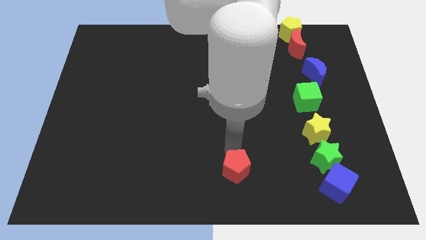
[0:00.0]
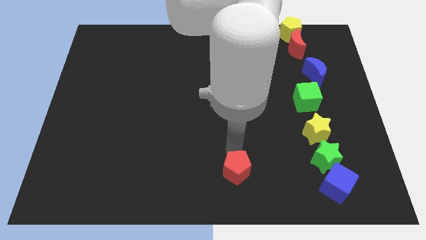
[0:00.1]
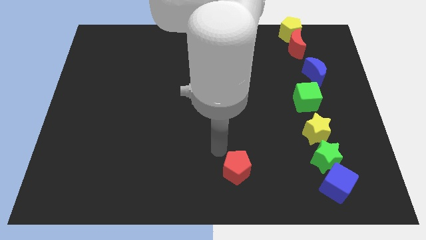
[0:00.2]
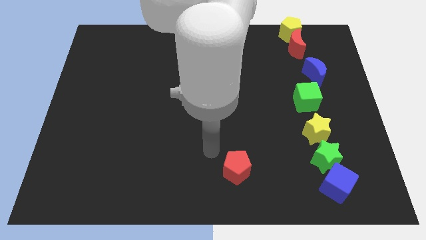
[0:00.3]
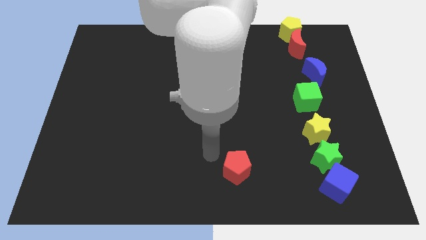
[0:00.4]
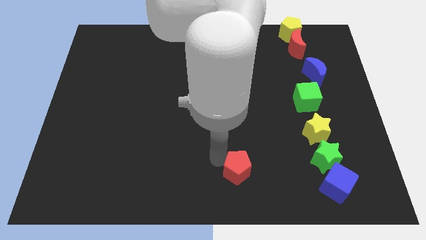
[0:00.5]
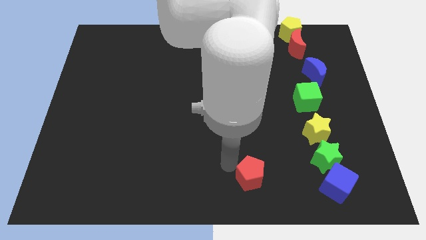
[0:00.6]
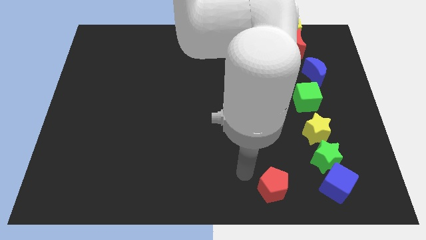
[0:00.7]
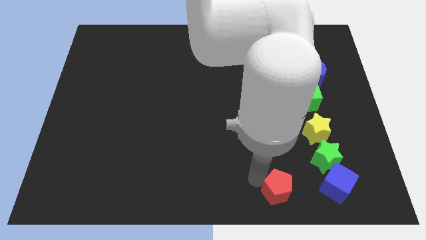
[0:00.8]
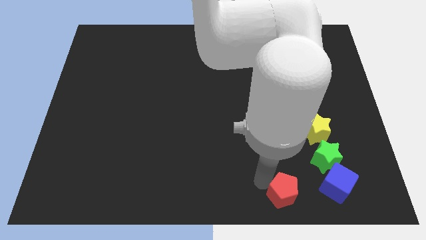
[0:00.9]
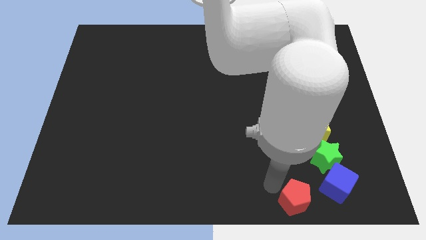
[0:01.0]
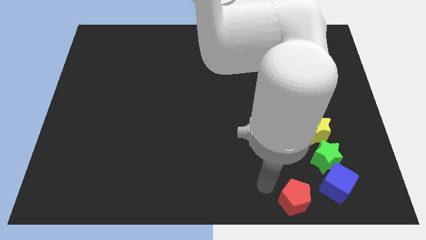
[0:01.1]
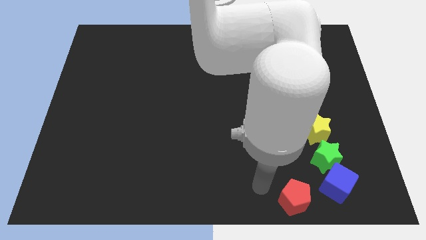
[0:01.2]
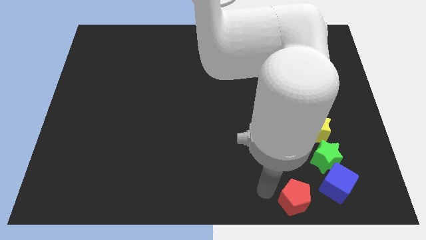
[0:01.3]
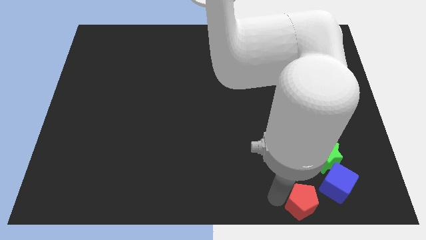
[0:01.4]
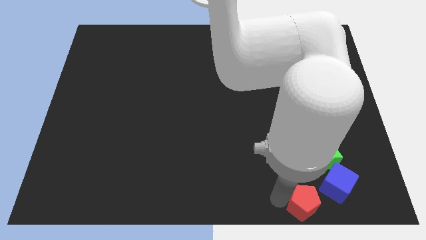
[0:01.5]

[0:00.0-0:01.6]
move red pentagon to the left side of the blue cube

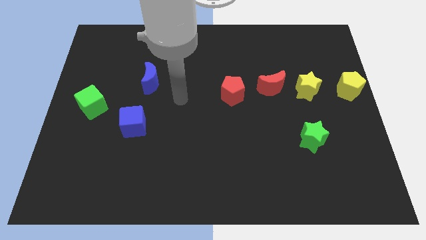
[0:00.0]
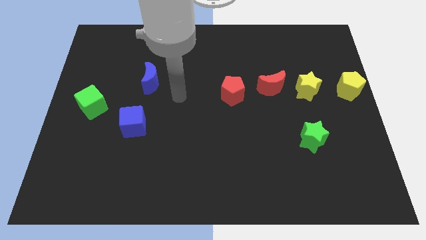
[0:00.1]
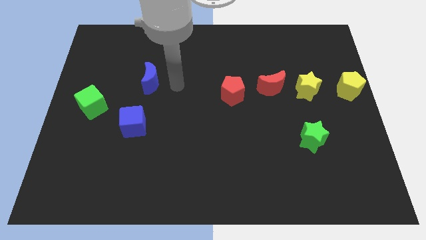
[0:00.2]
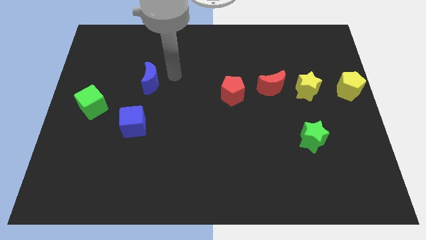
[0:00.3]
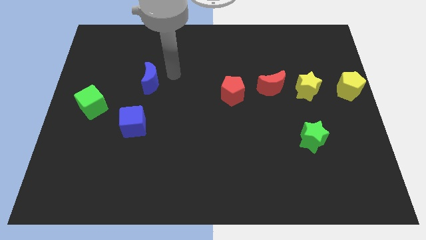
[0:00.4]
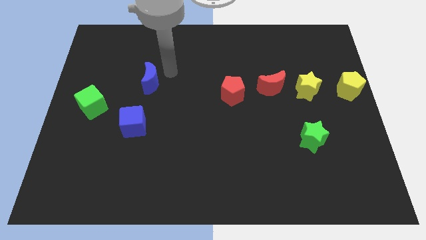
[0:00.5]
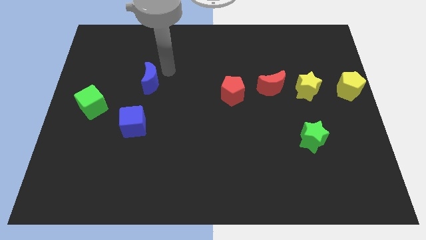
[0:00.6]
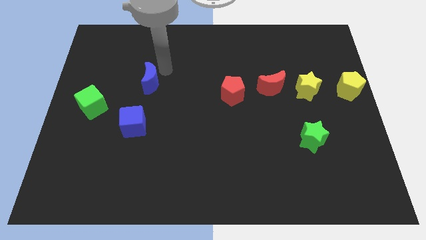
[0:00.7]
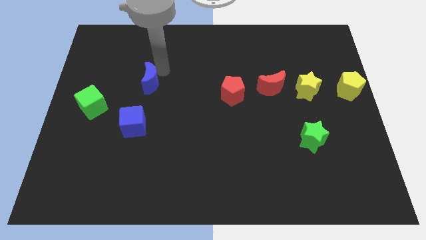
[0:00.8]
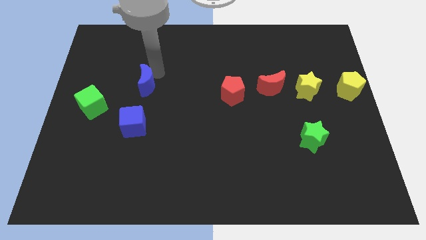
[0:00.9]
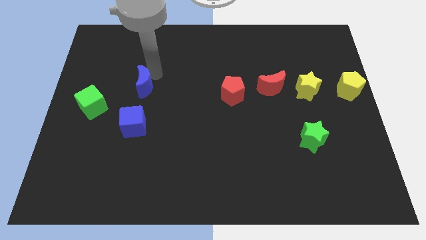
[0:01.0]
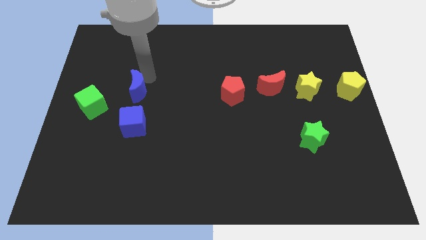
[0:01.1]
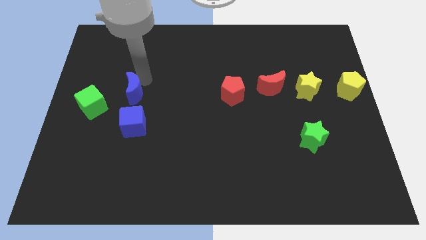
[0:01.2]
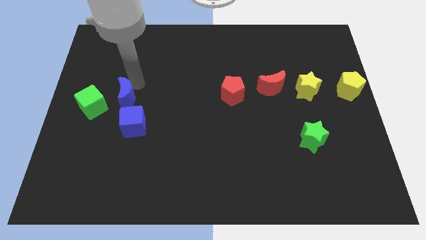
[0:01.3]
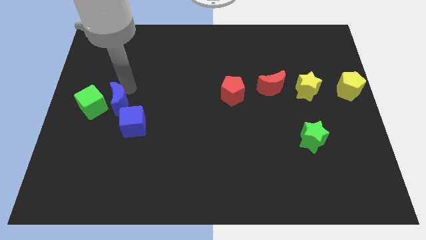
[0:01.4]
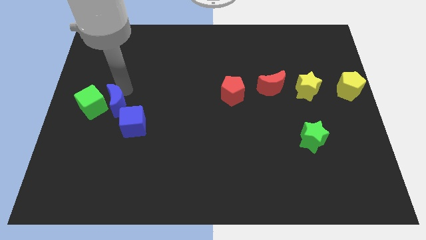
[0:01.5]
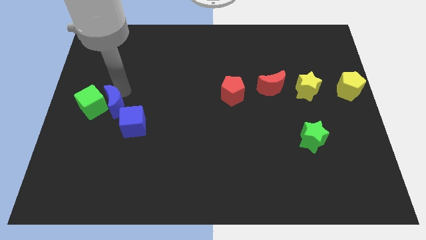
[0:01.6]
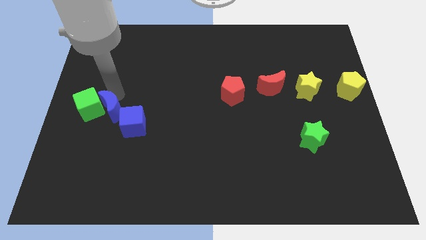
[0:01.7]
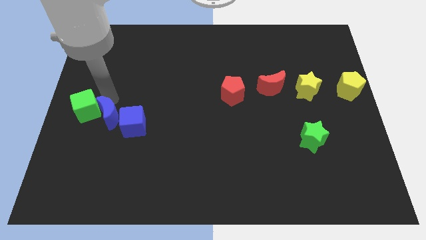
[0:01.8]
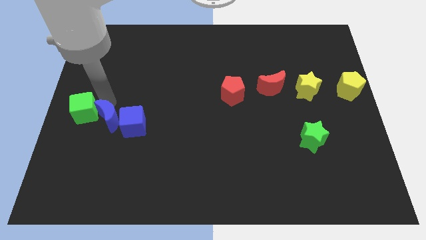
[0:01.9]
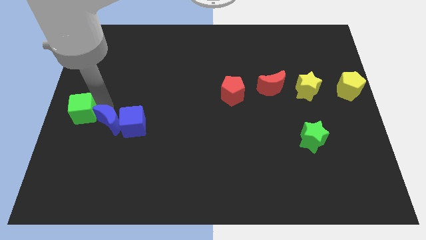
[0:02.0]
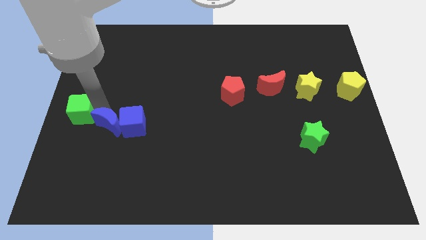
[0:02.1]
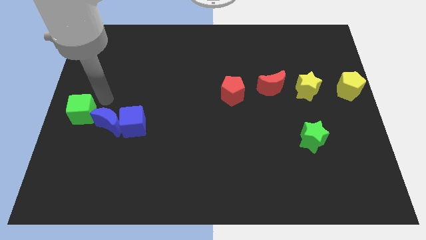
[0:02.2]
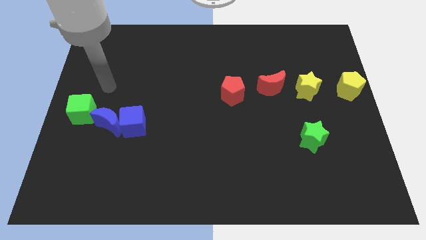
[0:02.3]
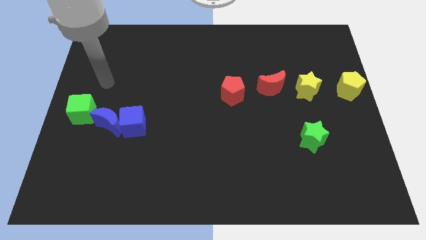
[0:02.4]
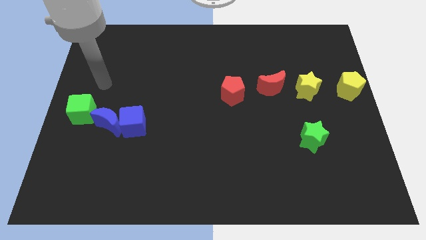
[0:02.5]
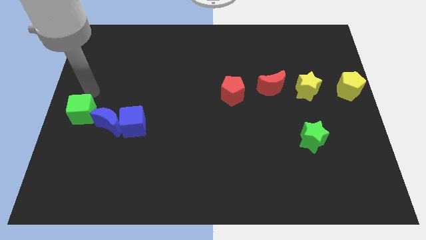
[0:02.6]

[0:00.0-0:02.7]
push the green cube using the blue crescent

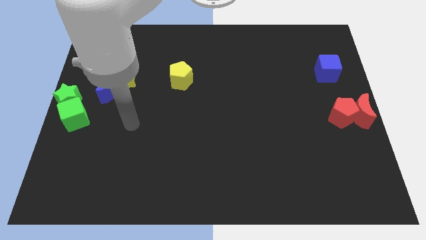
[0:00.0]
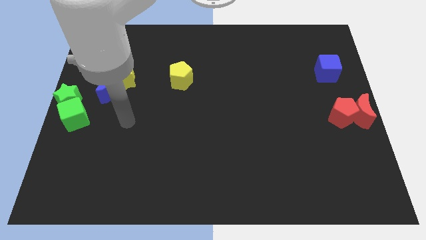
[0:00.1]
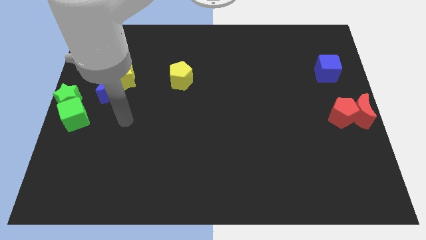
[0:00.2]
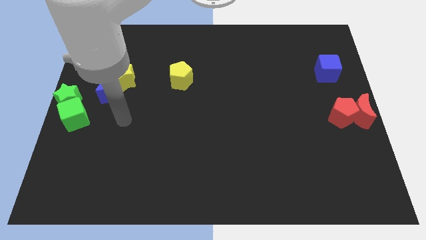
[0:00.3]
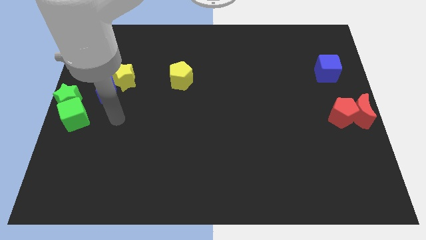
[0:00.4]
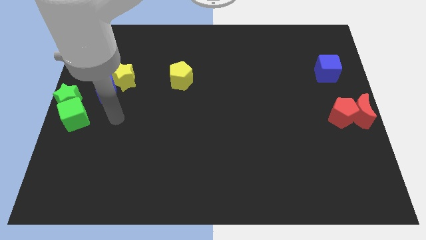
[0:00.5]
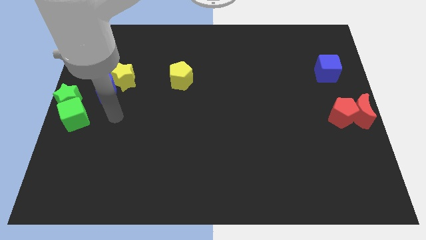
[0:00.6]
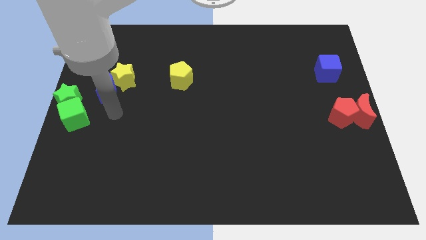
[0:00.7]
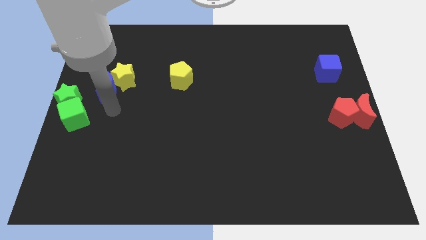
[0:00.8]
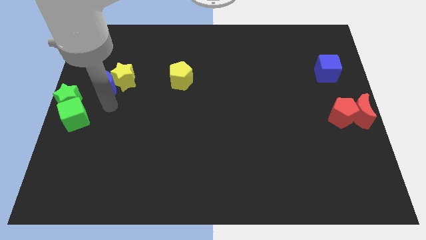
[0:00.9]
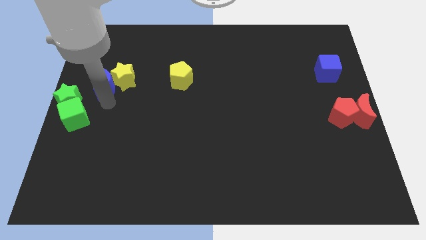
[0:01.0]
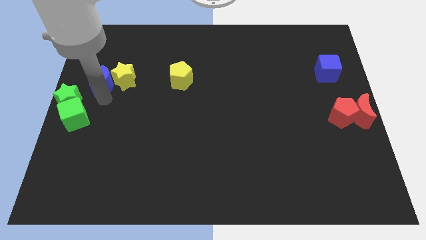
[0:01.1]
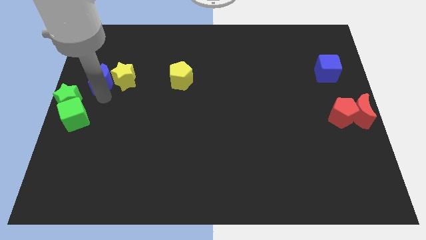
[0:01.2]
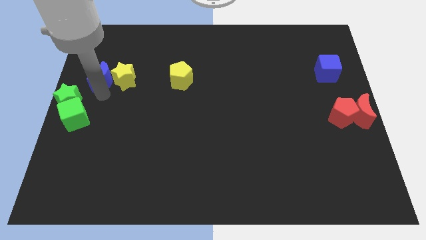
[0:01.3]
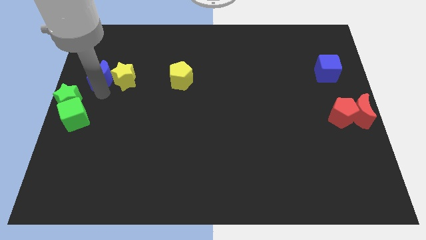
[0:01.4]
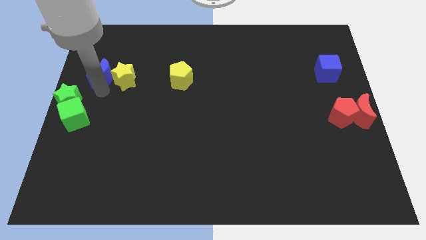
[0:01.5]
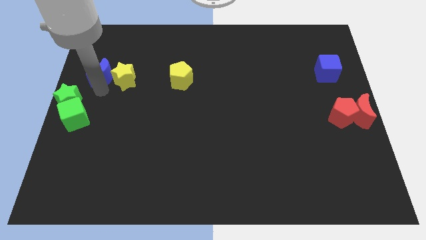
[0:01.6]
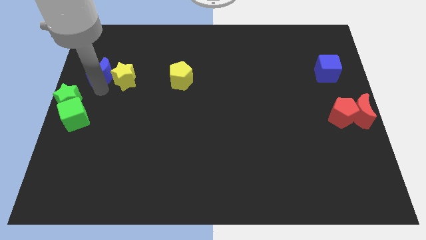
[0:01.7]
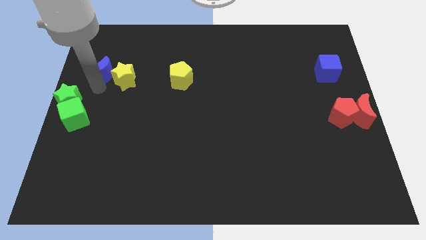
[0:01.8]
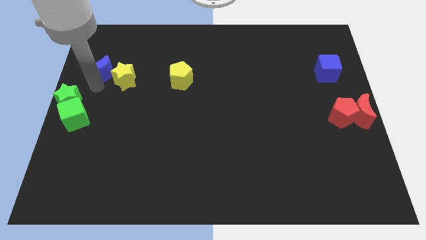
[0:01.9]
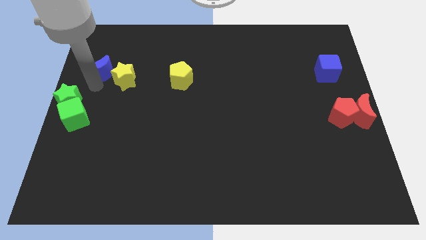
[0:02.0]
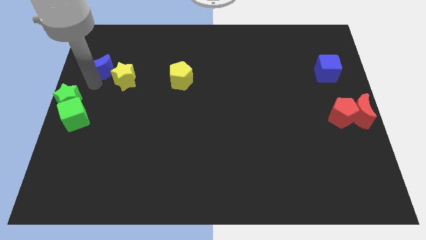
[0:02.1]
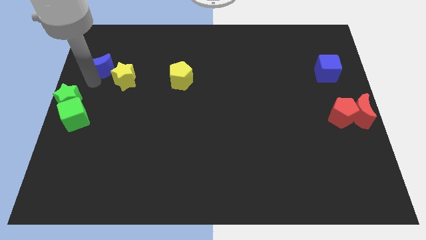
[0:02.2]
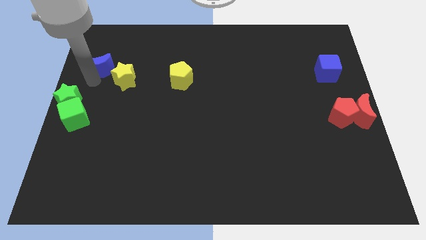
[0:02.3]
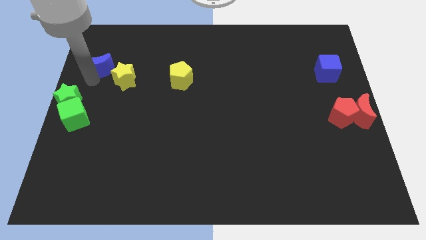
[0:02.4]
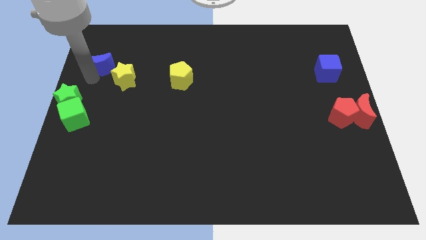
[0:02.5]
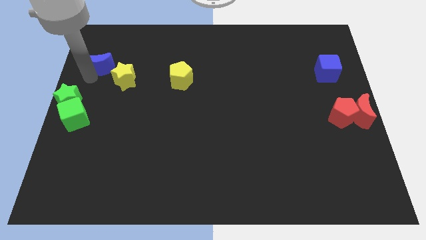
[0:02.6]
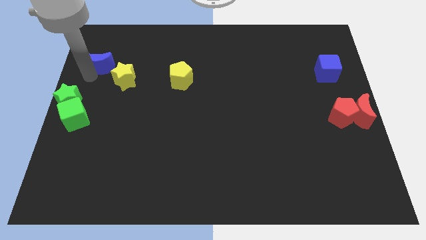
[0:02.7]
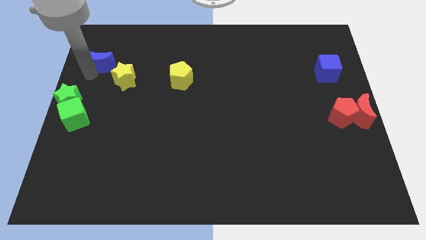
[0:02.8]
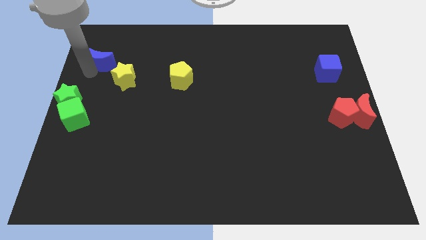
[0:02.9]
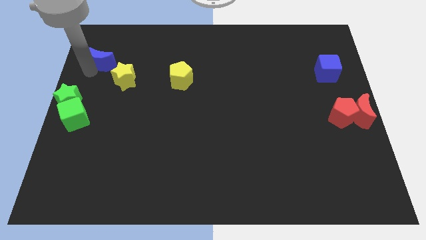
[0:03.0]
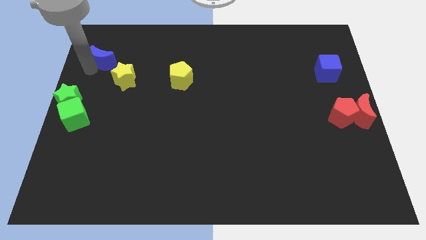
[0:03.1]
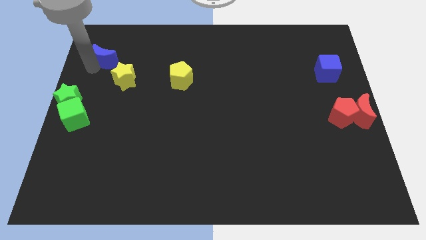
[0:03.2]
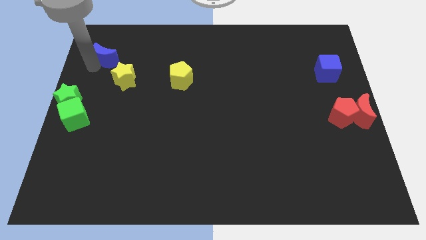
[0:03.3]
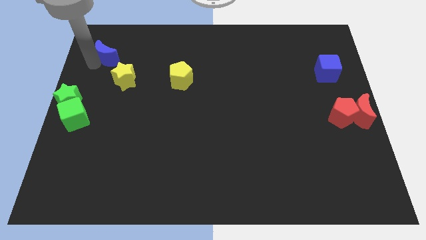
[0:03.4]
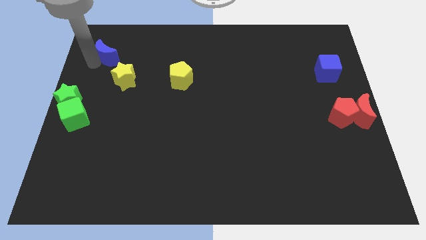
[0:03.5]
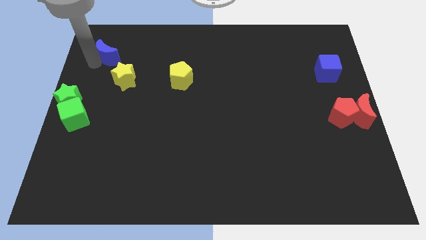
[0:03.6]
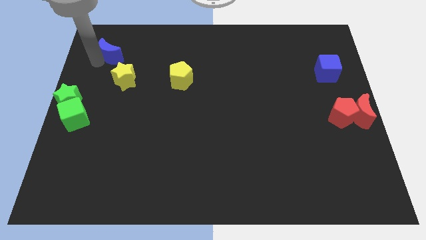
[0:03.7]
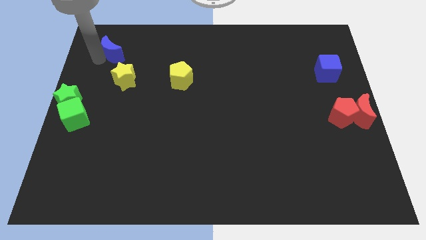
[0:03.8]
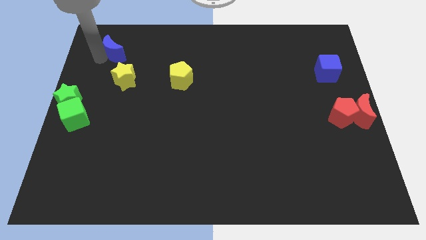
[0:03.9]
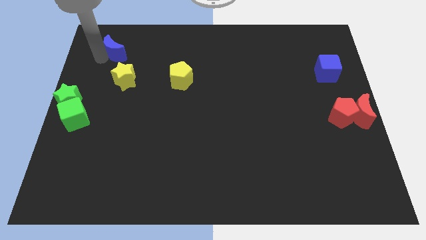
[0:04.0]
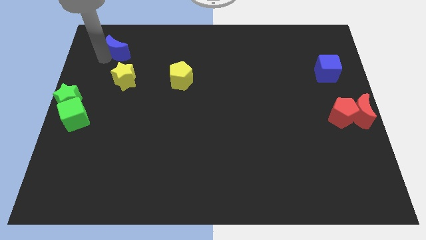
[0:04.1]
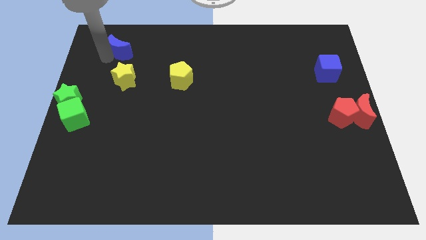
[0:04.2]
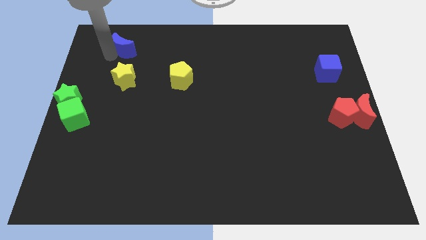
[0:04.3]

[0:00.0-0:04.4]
place blue moon to the top of yellow star

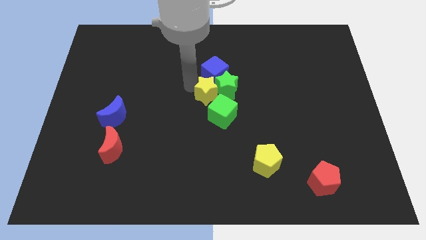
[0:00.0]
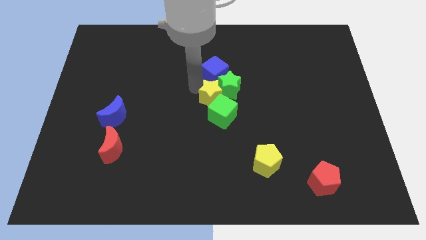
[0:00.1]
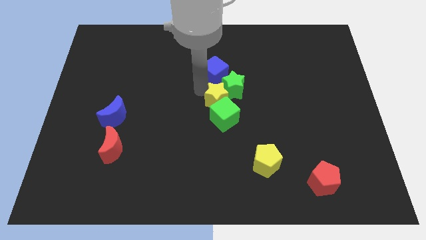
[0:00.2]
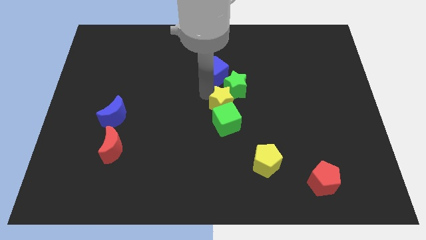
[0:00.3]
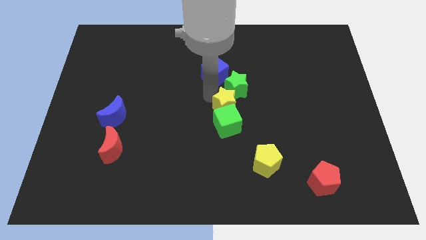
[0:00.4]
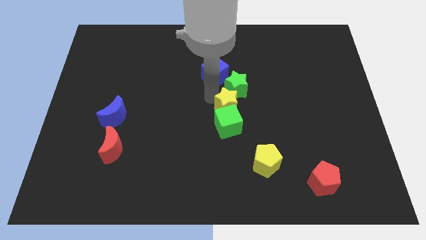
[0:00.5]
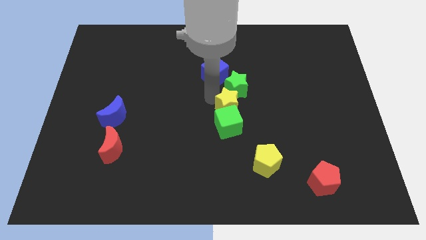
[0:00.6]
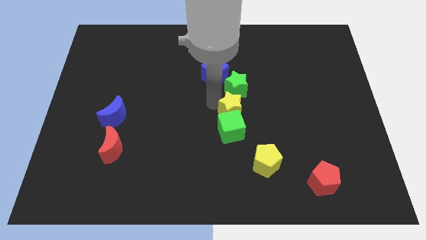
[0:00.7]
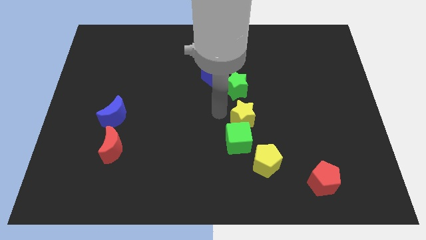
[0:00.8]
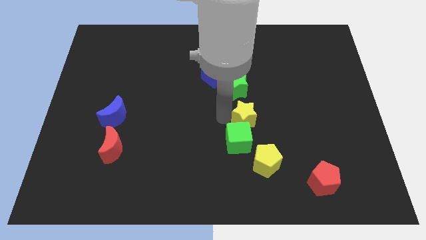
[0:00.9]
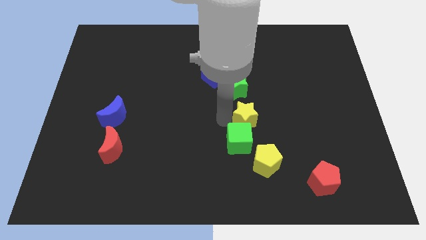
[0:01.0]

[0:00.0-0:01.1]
push yellow star and green cube slightly downwards
